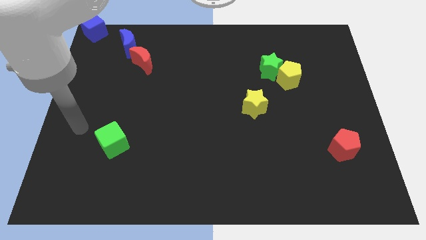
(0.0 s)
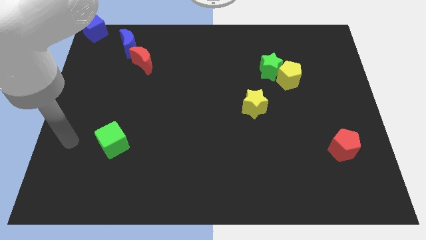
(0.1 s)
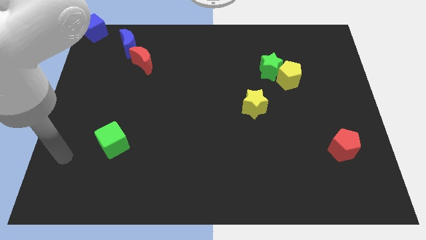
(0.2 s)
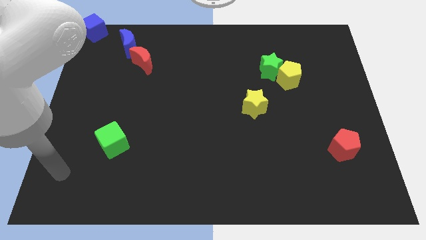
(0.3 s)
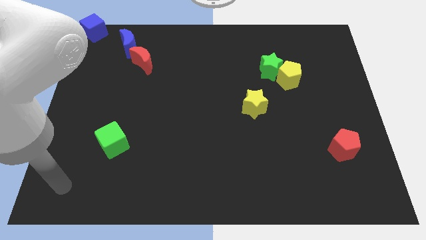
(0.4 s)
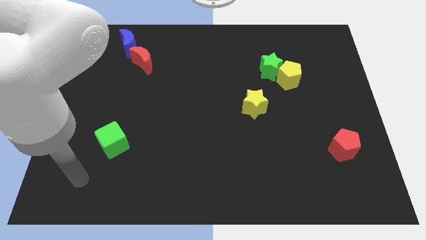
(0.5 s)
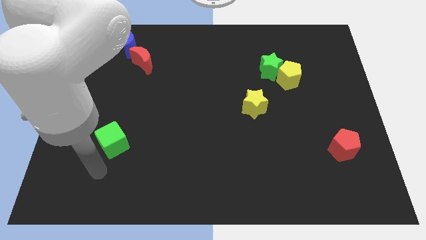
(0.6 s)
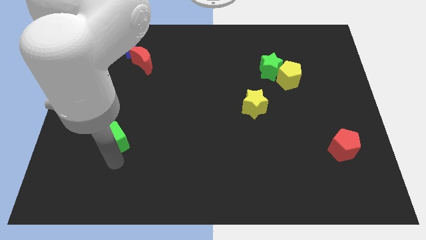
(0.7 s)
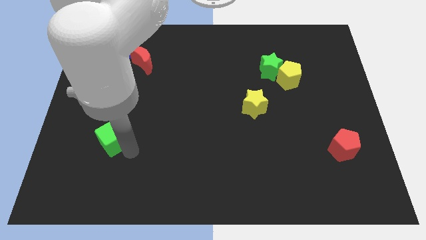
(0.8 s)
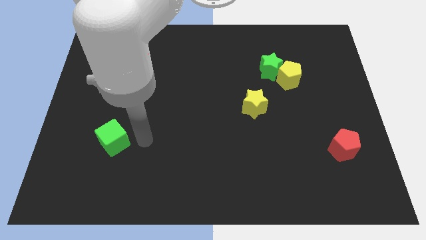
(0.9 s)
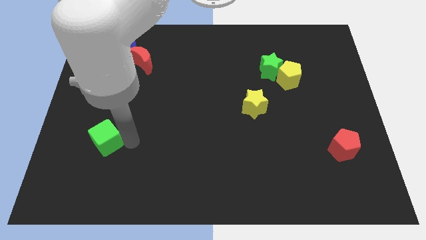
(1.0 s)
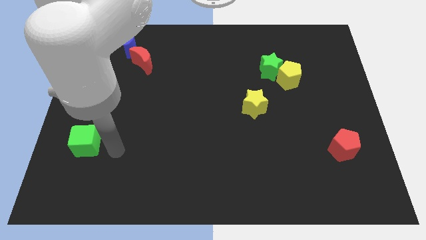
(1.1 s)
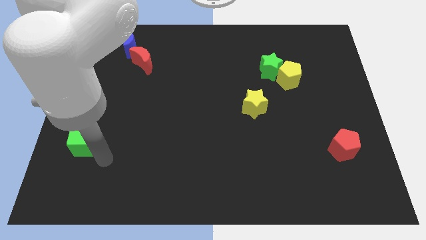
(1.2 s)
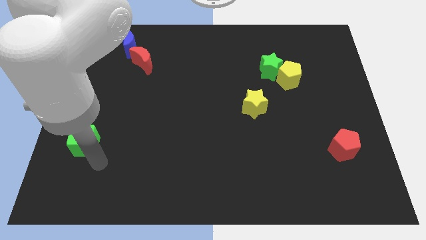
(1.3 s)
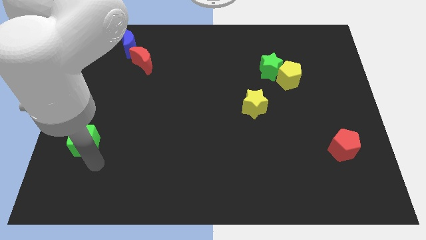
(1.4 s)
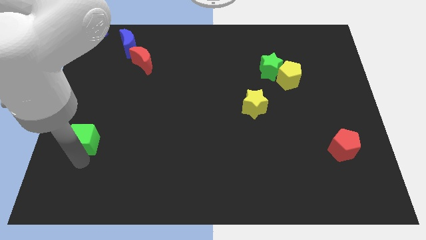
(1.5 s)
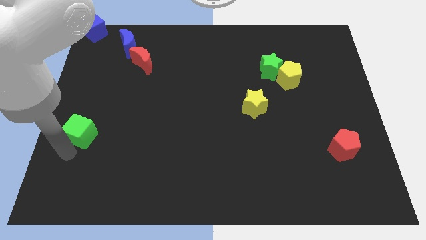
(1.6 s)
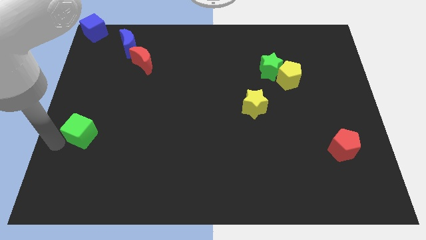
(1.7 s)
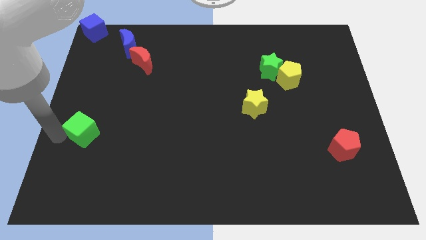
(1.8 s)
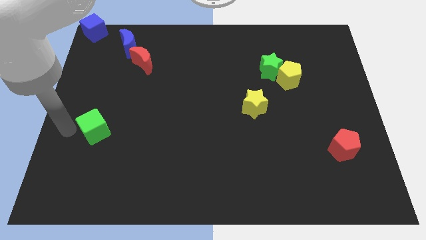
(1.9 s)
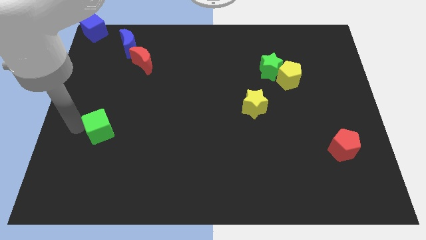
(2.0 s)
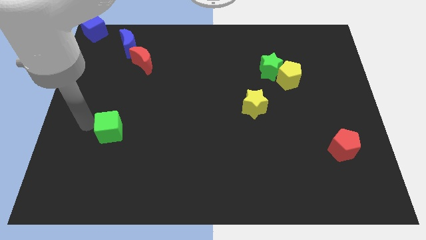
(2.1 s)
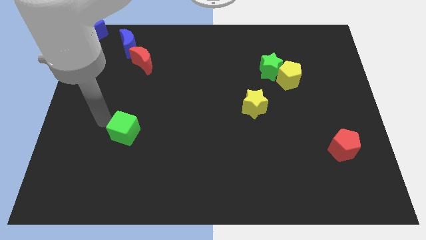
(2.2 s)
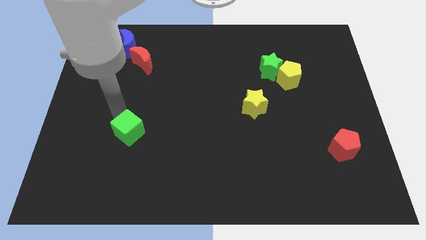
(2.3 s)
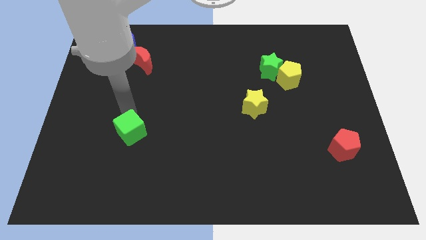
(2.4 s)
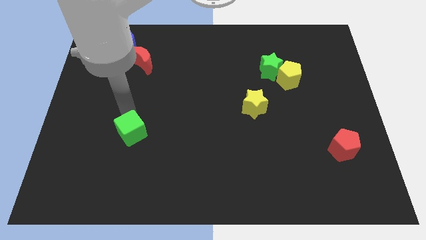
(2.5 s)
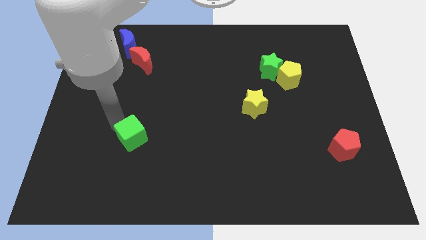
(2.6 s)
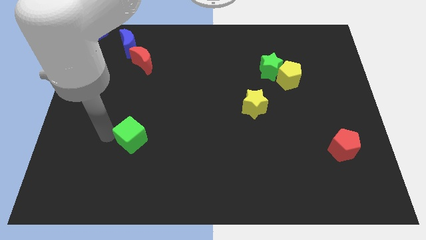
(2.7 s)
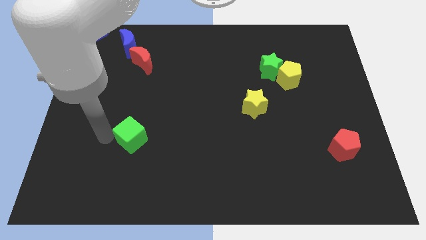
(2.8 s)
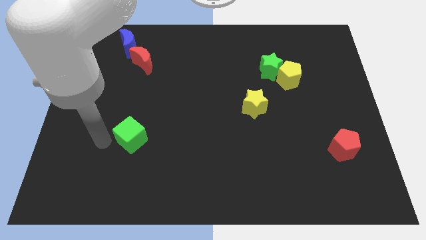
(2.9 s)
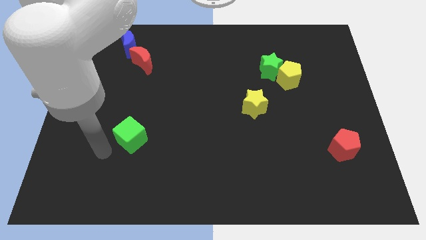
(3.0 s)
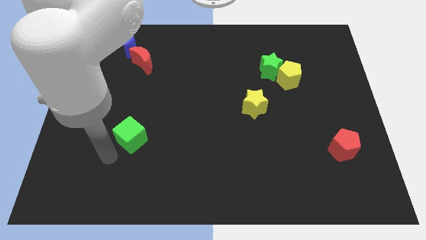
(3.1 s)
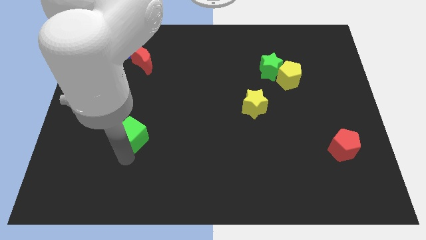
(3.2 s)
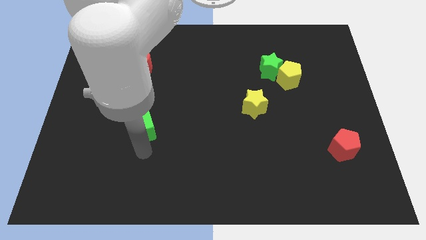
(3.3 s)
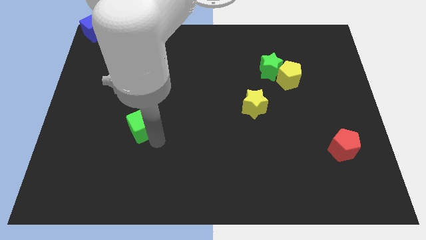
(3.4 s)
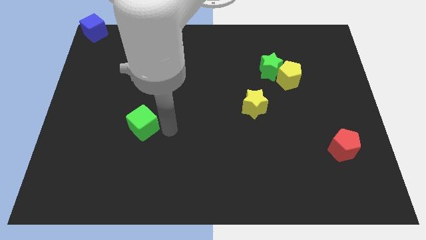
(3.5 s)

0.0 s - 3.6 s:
put the green cube vertically below the red moon

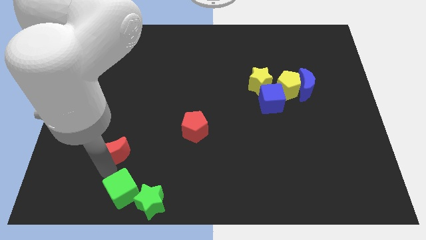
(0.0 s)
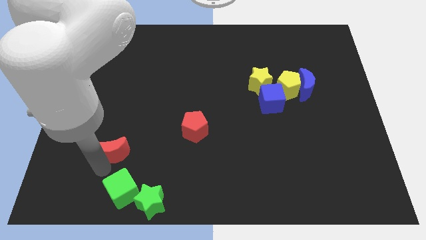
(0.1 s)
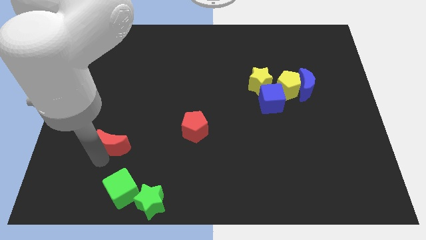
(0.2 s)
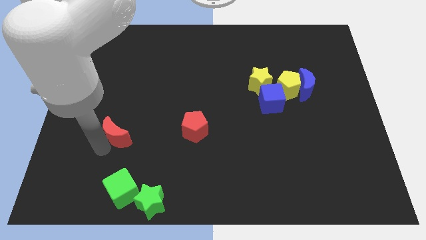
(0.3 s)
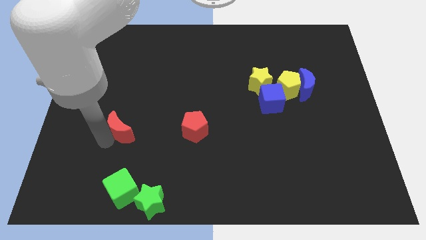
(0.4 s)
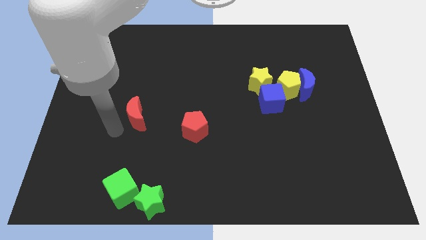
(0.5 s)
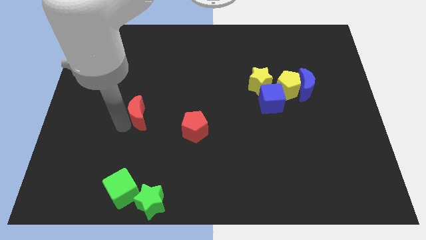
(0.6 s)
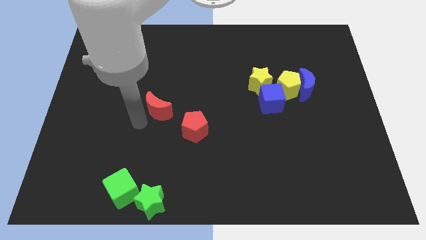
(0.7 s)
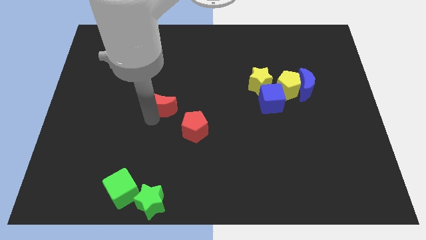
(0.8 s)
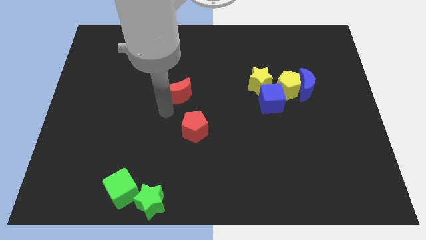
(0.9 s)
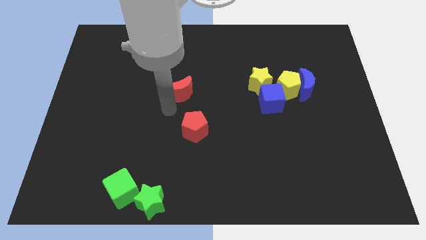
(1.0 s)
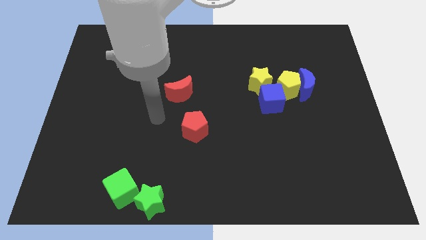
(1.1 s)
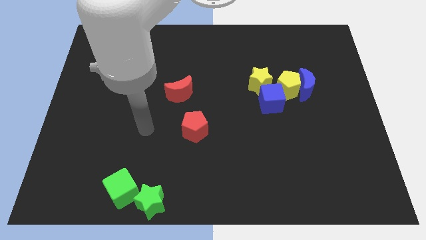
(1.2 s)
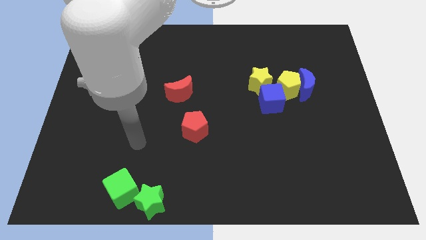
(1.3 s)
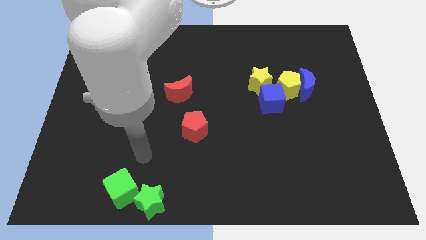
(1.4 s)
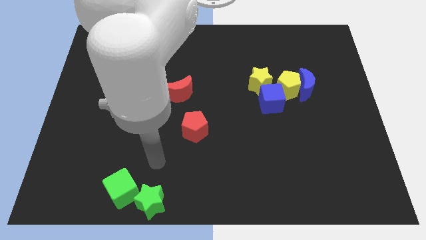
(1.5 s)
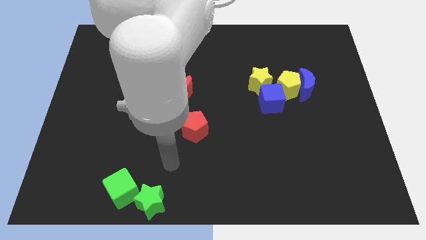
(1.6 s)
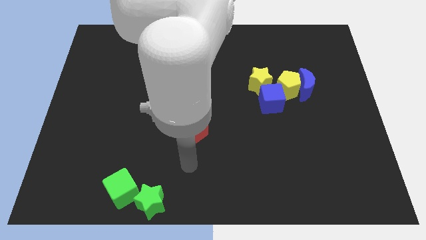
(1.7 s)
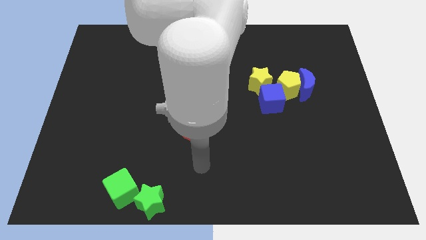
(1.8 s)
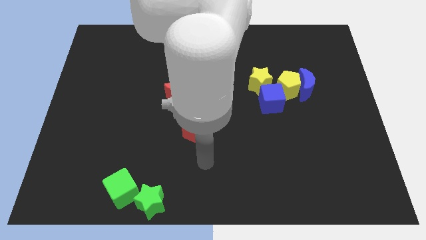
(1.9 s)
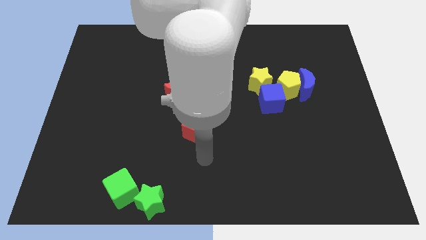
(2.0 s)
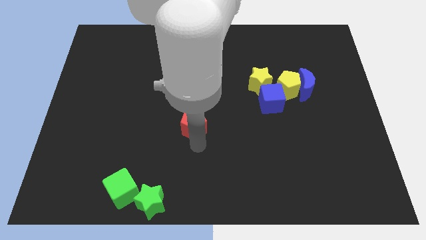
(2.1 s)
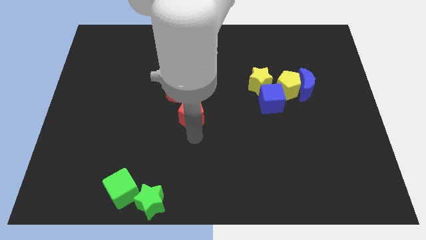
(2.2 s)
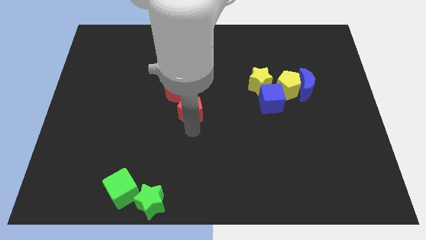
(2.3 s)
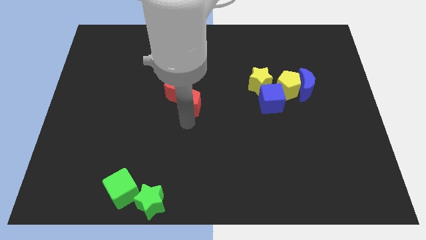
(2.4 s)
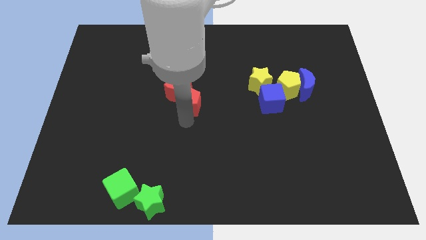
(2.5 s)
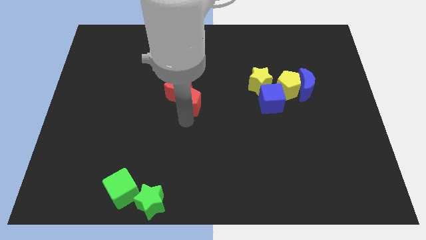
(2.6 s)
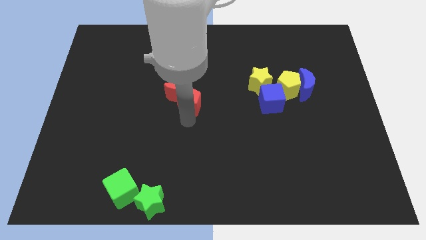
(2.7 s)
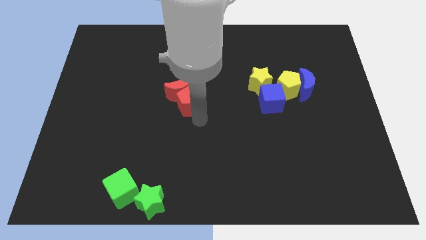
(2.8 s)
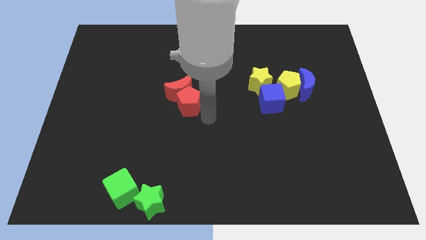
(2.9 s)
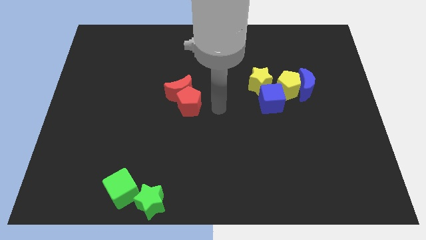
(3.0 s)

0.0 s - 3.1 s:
push the red blocks at the left side of the group of blocks

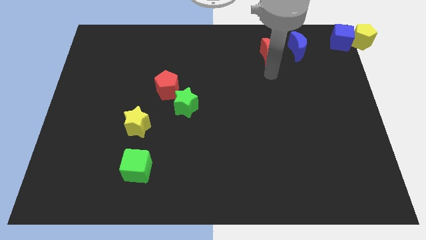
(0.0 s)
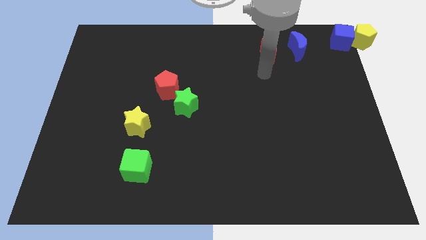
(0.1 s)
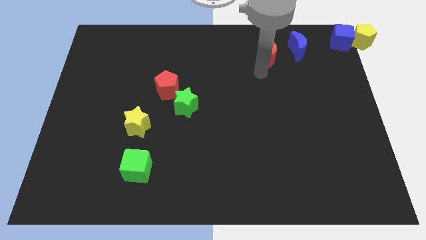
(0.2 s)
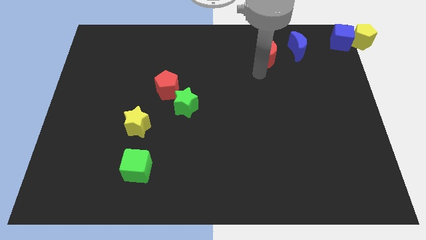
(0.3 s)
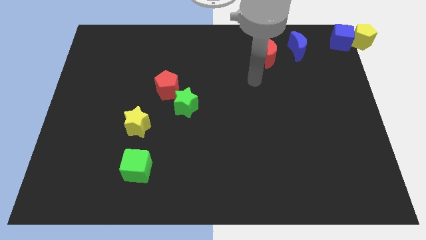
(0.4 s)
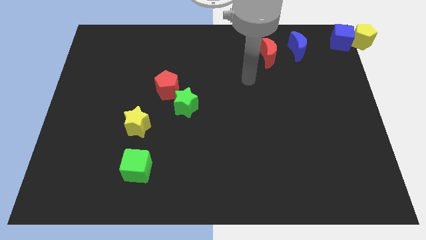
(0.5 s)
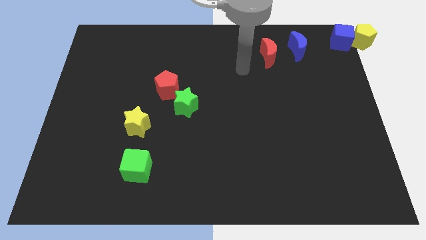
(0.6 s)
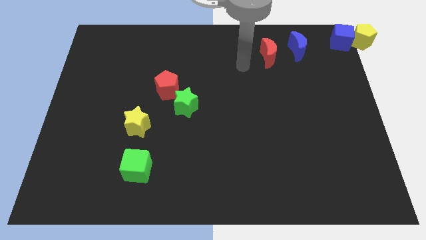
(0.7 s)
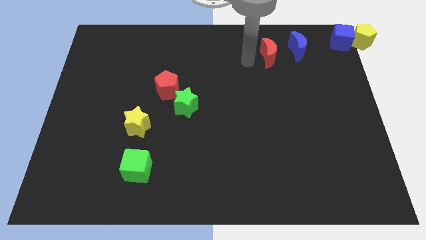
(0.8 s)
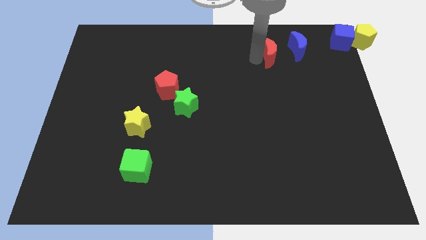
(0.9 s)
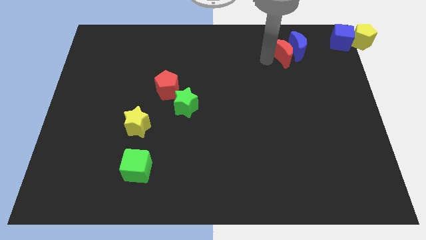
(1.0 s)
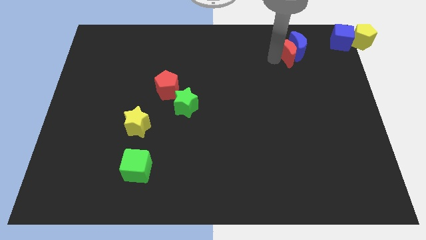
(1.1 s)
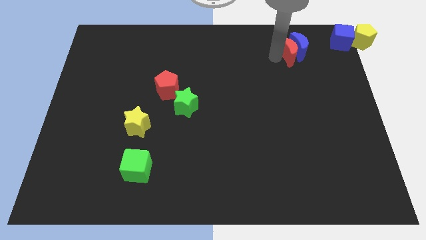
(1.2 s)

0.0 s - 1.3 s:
push the red crescent into the blue crescent

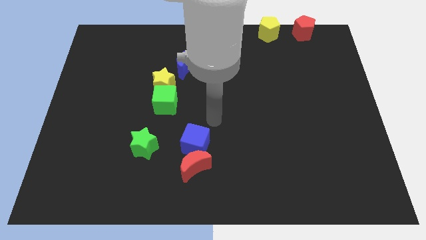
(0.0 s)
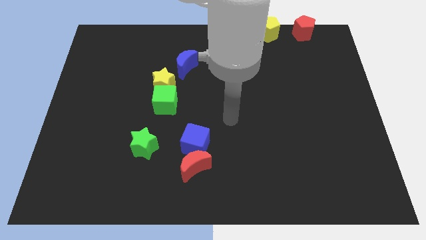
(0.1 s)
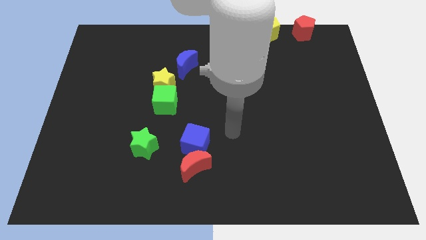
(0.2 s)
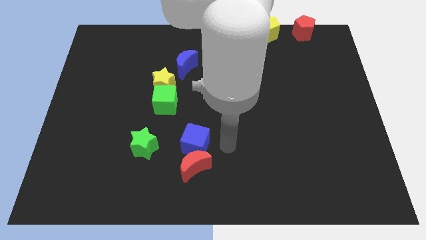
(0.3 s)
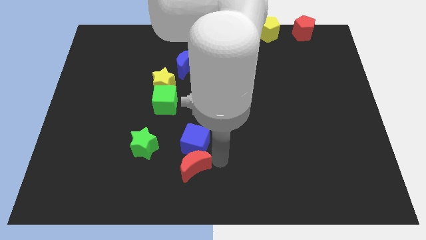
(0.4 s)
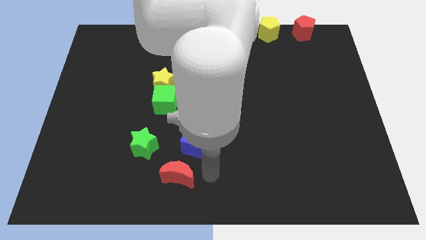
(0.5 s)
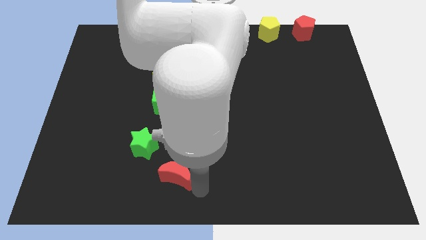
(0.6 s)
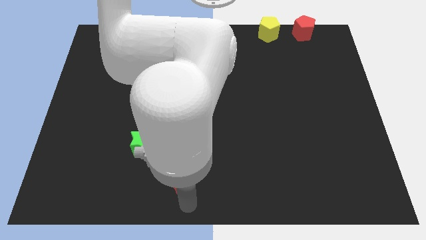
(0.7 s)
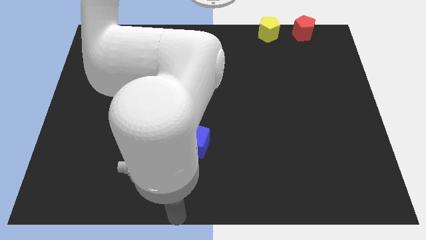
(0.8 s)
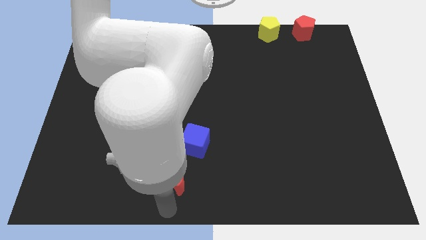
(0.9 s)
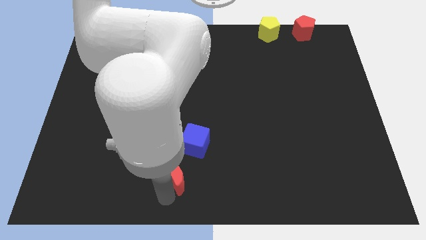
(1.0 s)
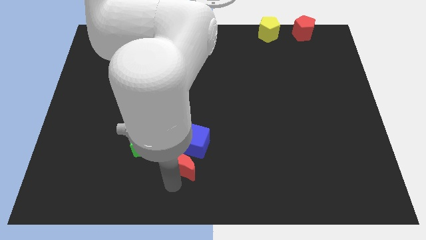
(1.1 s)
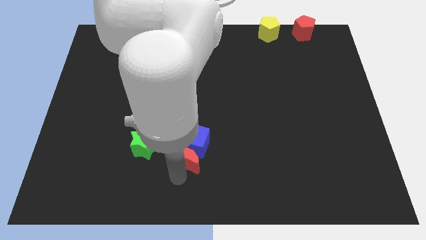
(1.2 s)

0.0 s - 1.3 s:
slide the red moon to the bottom left side of the blue cube
